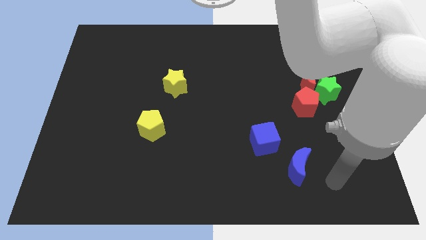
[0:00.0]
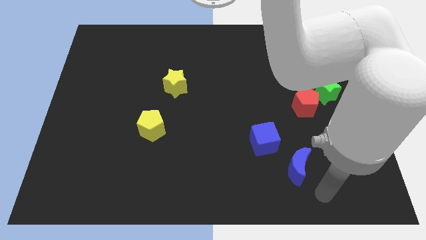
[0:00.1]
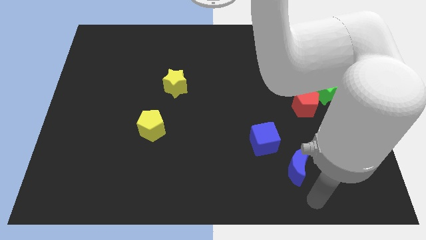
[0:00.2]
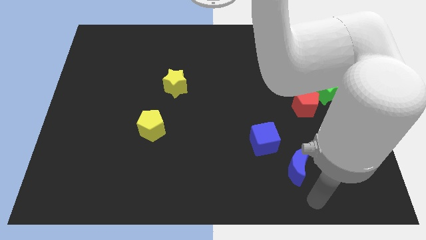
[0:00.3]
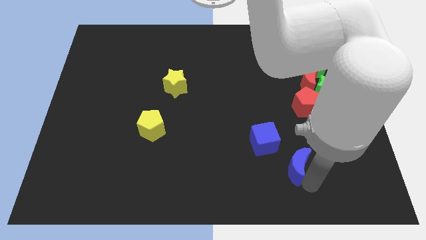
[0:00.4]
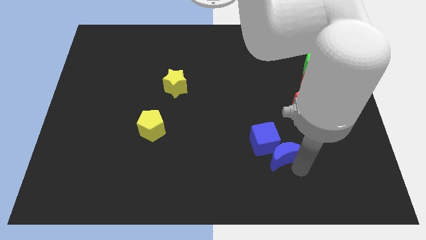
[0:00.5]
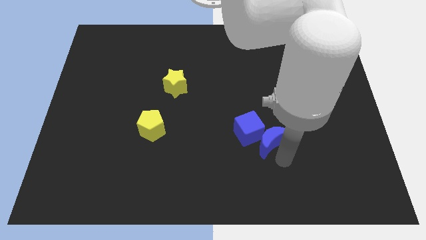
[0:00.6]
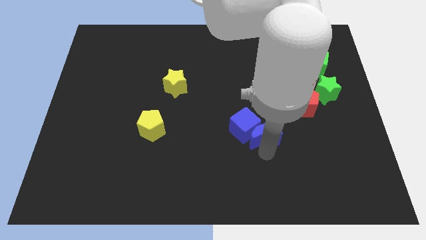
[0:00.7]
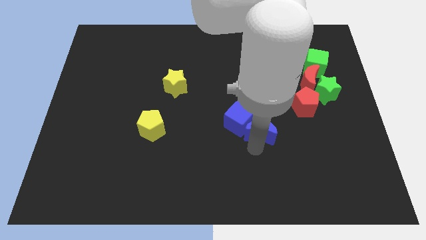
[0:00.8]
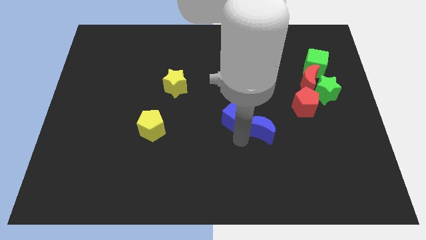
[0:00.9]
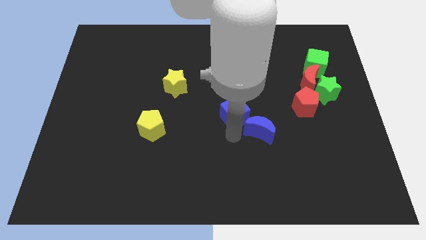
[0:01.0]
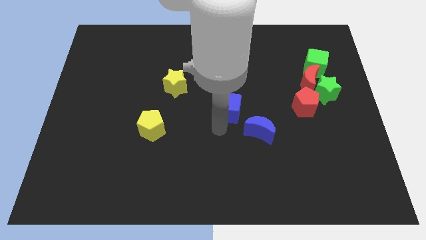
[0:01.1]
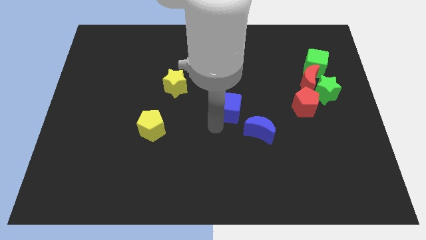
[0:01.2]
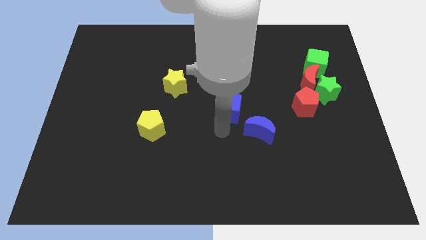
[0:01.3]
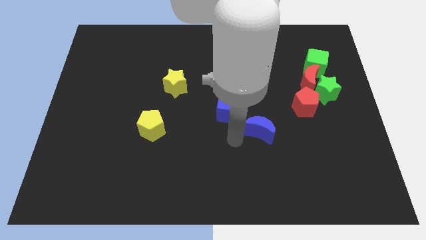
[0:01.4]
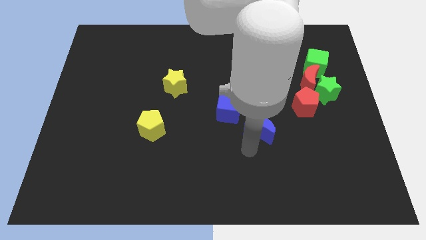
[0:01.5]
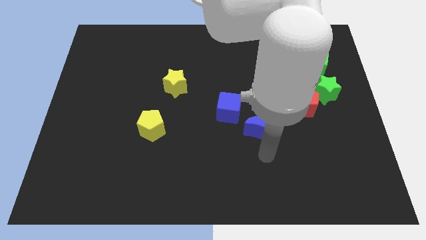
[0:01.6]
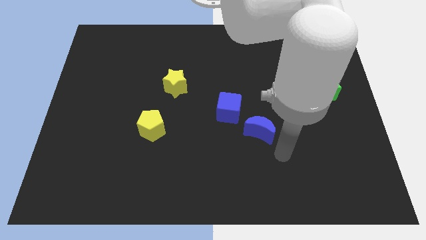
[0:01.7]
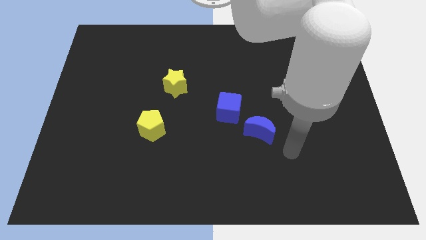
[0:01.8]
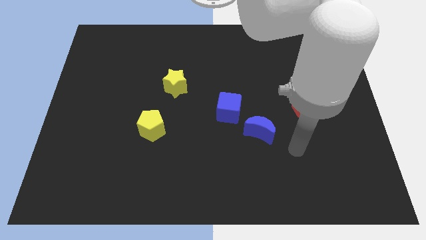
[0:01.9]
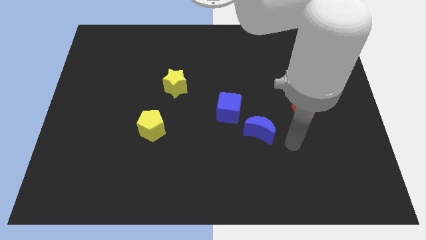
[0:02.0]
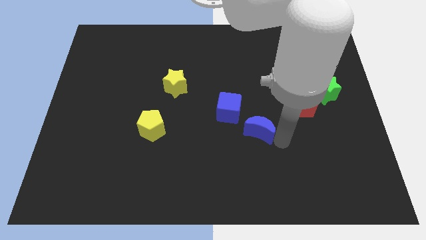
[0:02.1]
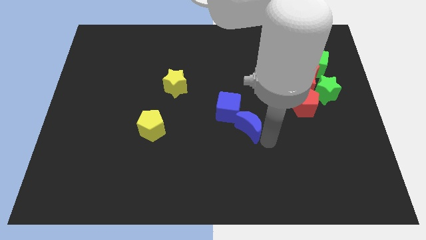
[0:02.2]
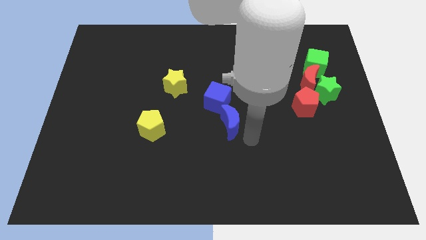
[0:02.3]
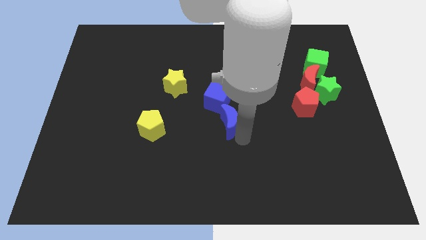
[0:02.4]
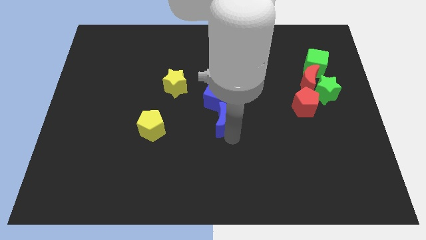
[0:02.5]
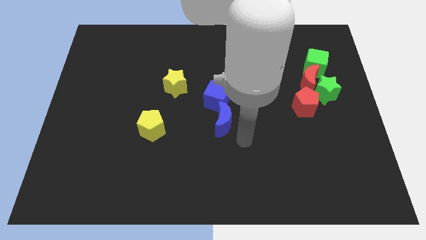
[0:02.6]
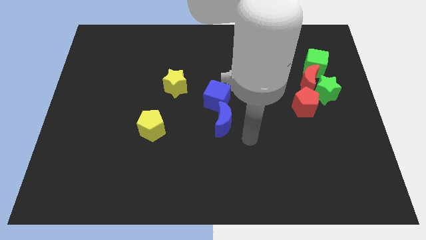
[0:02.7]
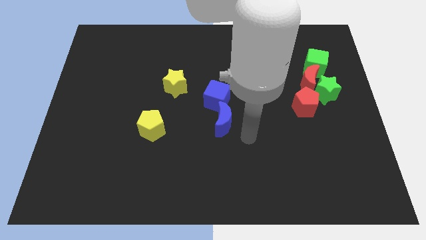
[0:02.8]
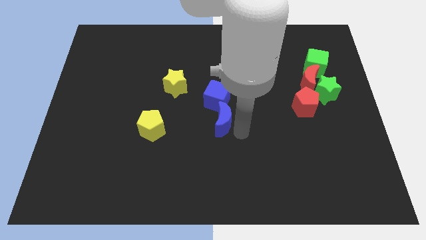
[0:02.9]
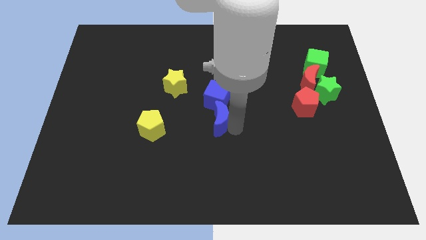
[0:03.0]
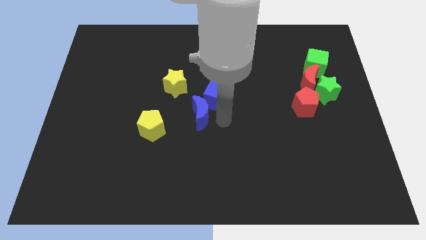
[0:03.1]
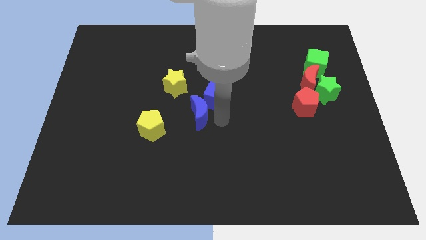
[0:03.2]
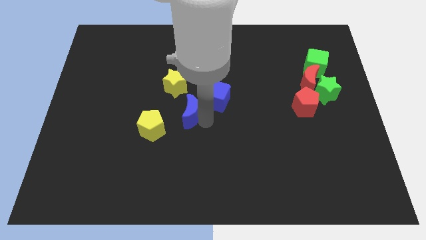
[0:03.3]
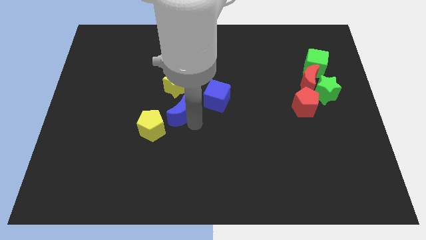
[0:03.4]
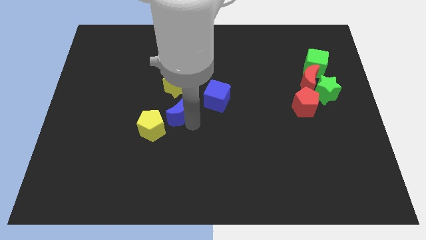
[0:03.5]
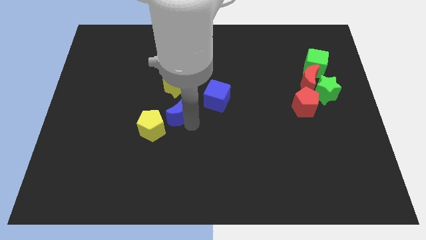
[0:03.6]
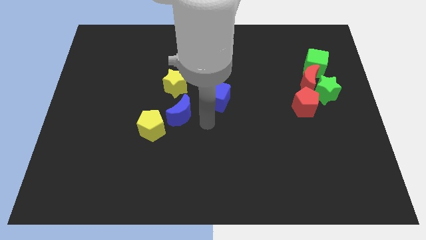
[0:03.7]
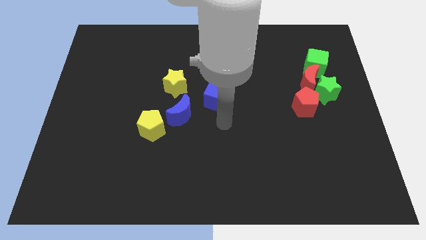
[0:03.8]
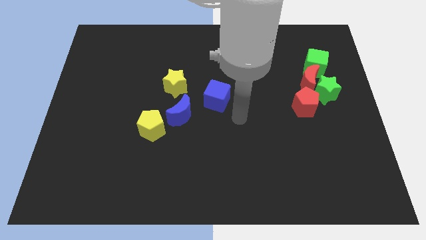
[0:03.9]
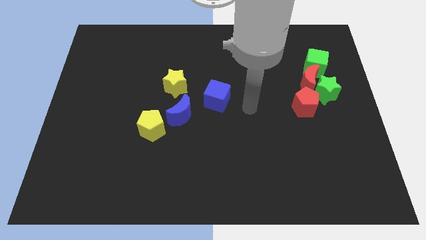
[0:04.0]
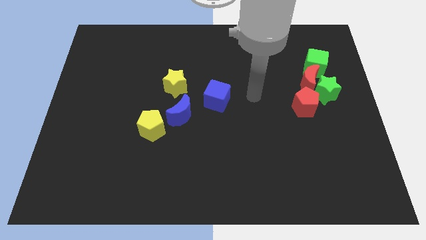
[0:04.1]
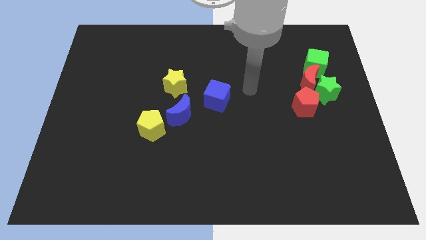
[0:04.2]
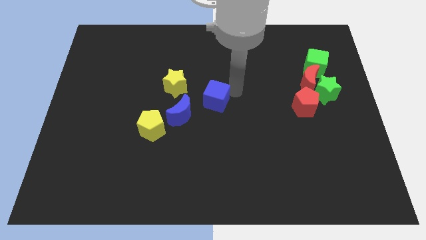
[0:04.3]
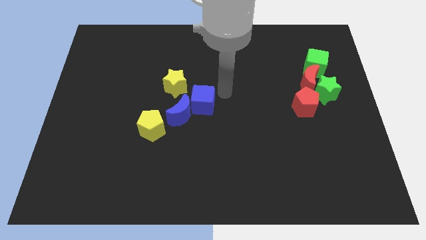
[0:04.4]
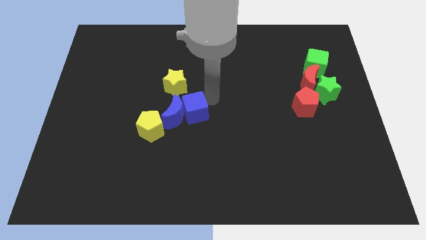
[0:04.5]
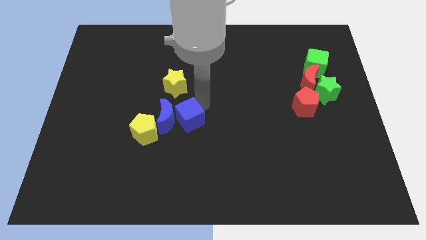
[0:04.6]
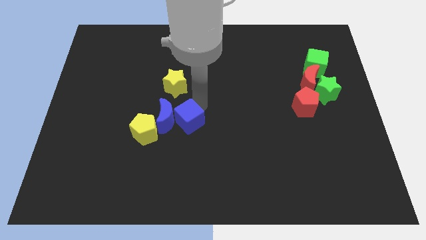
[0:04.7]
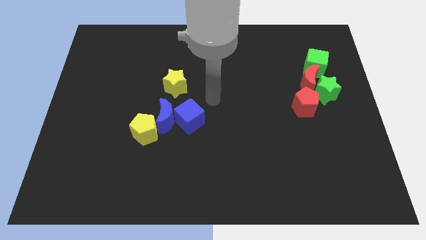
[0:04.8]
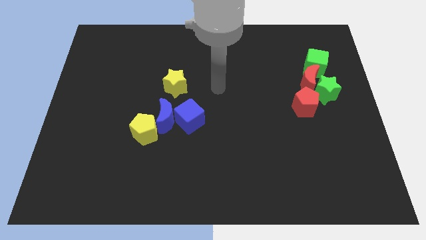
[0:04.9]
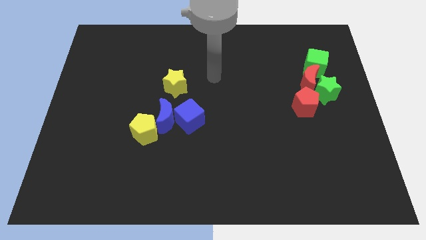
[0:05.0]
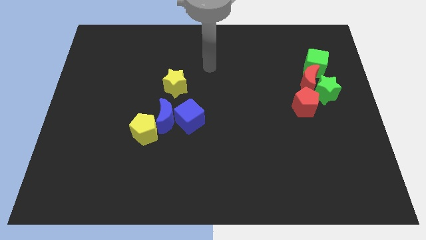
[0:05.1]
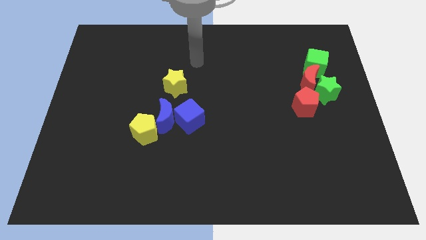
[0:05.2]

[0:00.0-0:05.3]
place the blue blocks below the yellow star

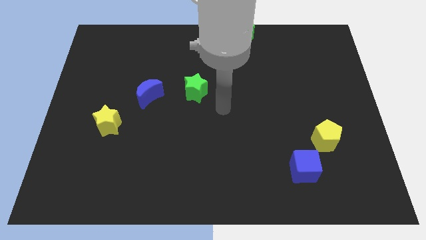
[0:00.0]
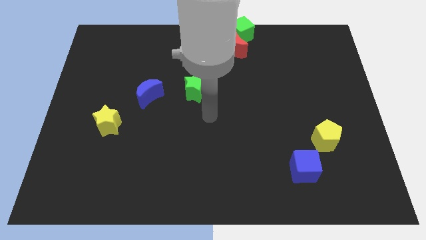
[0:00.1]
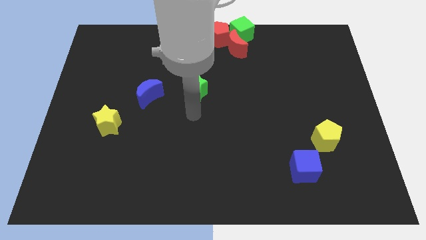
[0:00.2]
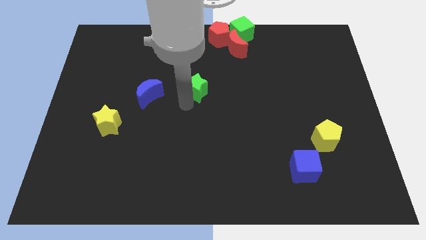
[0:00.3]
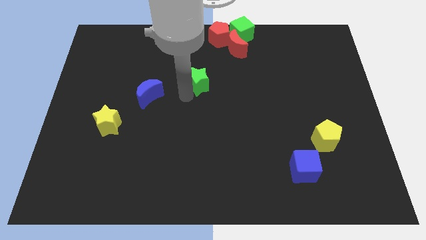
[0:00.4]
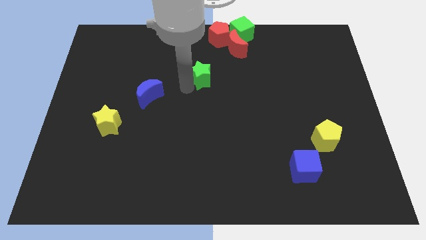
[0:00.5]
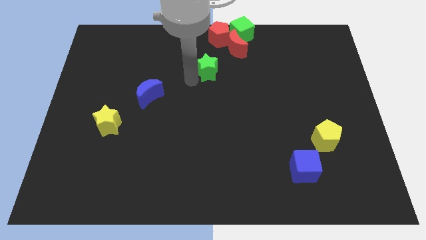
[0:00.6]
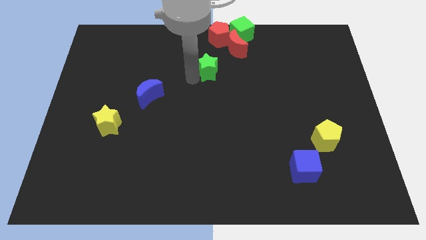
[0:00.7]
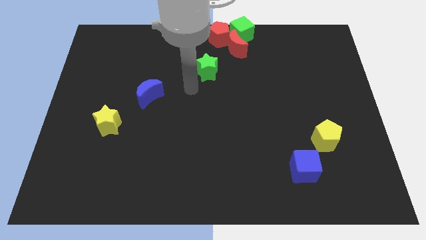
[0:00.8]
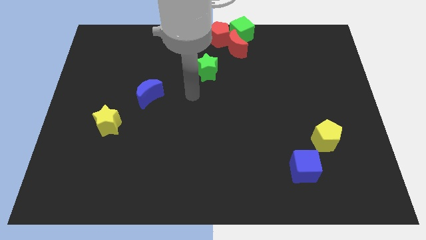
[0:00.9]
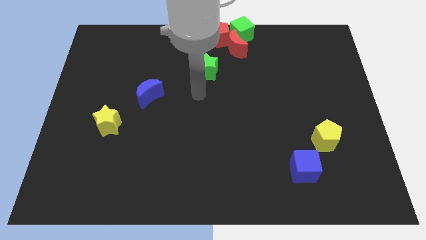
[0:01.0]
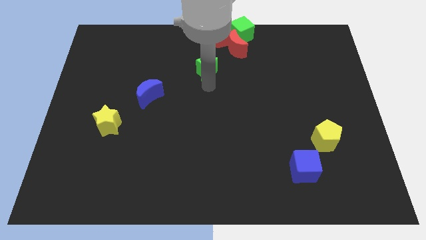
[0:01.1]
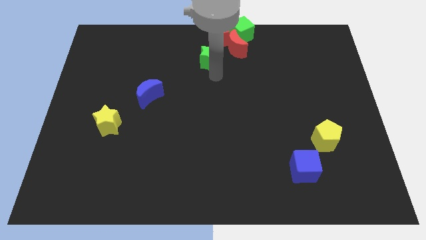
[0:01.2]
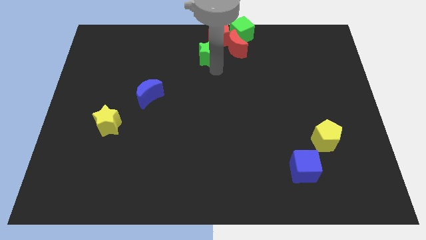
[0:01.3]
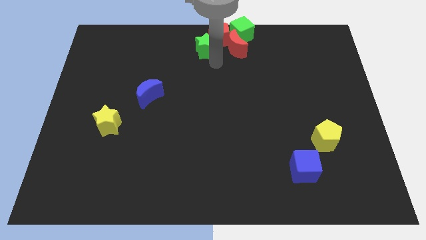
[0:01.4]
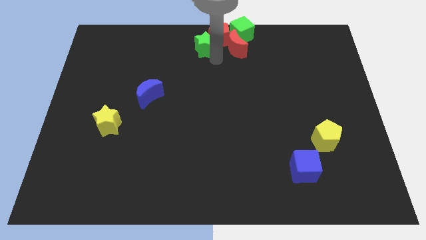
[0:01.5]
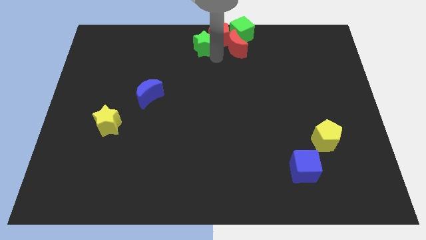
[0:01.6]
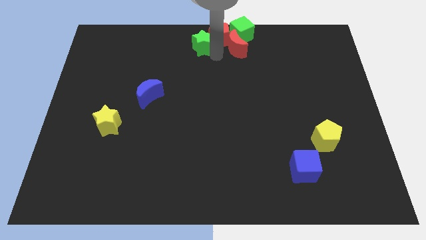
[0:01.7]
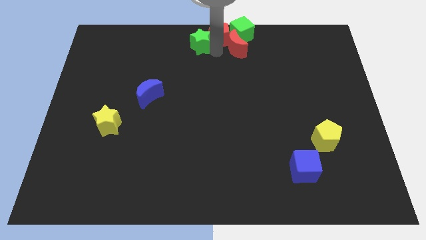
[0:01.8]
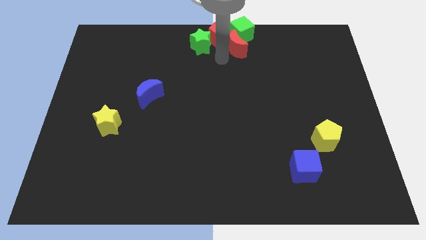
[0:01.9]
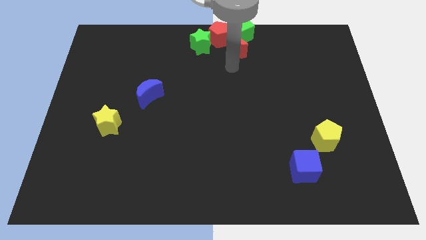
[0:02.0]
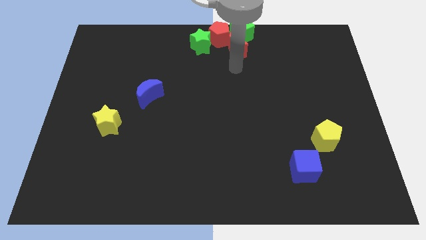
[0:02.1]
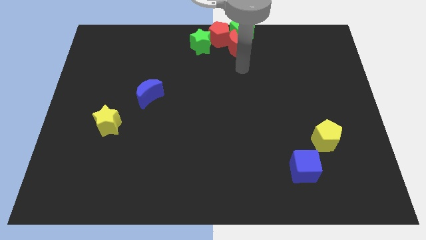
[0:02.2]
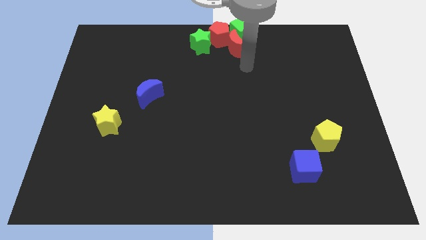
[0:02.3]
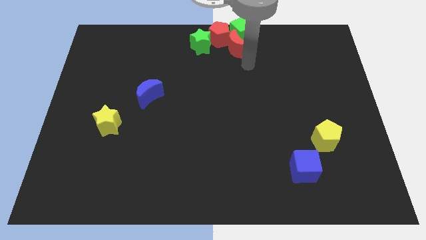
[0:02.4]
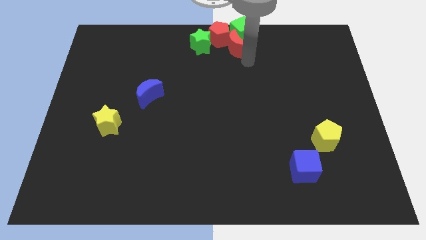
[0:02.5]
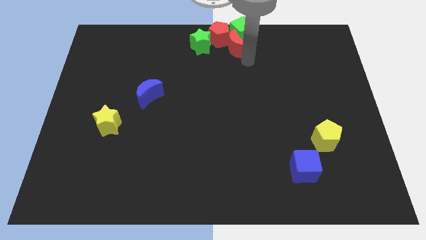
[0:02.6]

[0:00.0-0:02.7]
move green star close to red pentagon

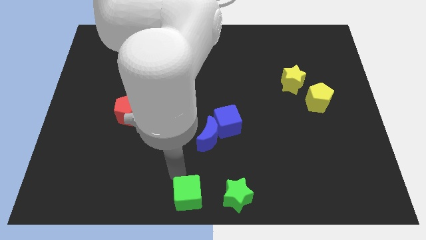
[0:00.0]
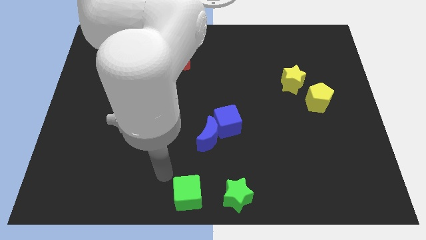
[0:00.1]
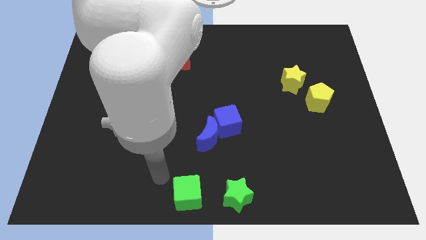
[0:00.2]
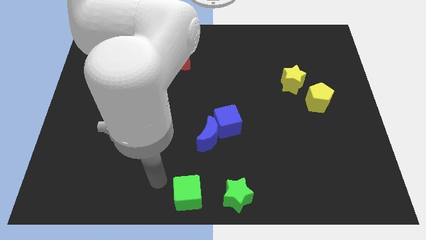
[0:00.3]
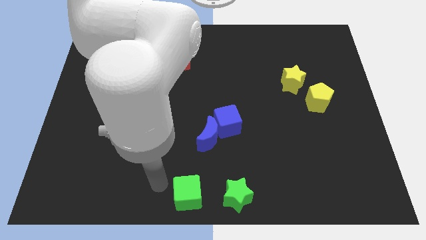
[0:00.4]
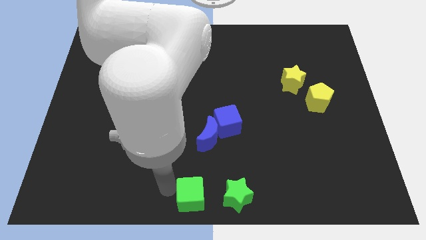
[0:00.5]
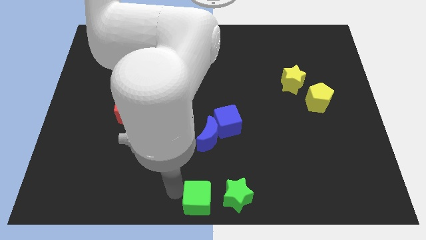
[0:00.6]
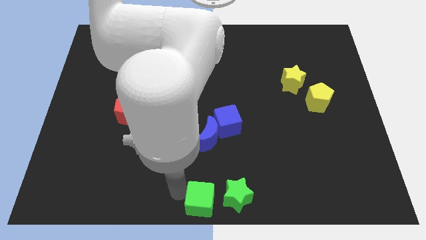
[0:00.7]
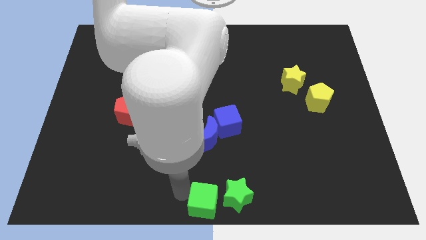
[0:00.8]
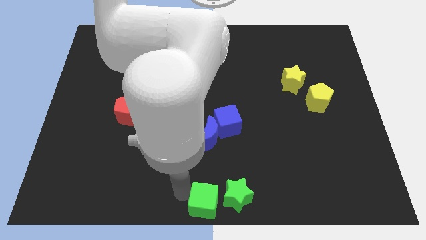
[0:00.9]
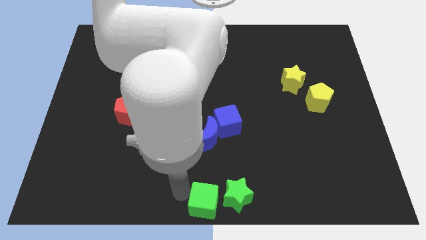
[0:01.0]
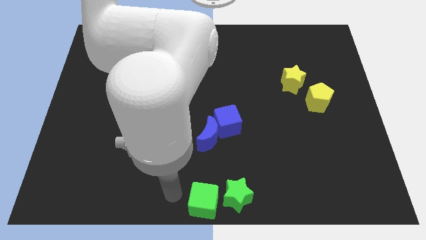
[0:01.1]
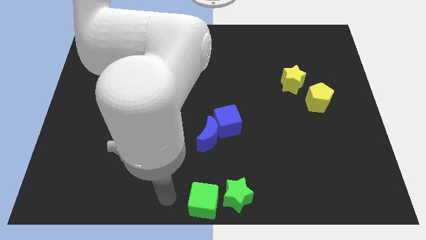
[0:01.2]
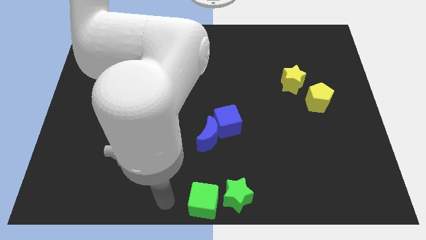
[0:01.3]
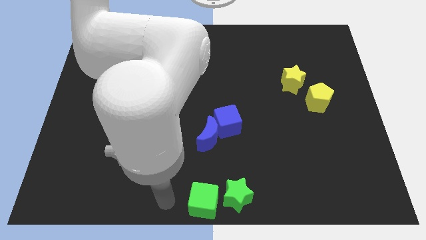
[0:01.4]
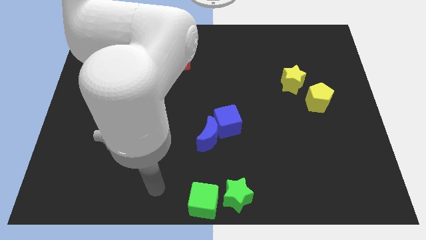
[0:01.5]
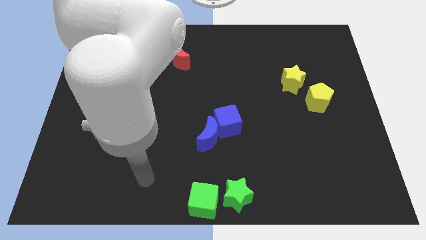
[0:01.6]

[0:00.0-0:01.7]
move green cube close to green star
